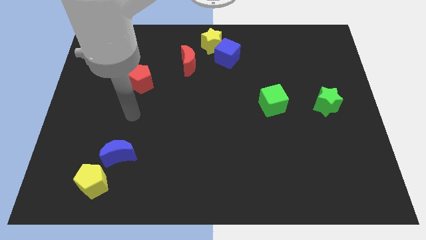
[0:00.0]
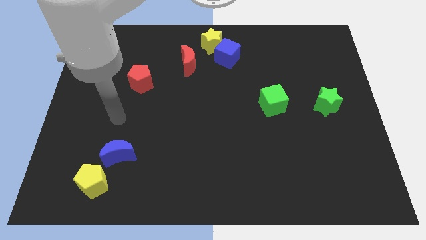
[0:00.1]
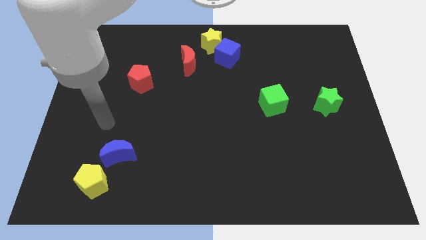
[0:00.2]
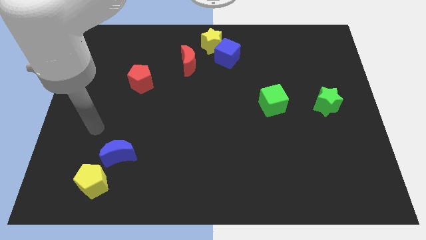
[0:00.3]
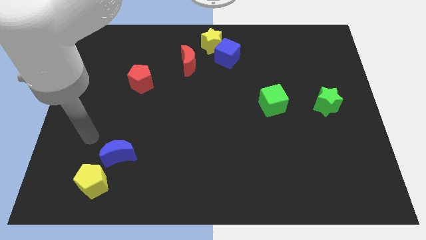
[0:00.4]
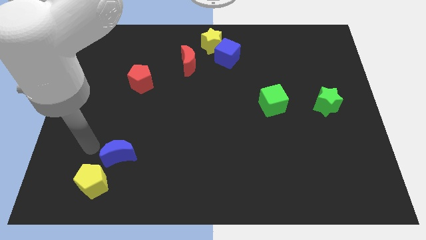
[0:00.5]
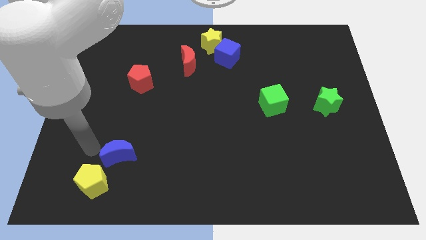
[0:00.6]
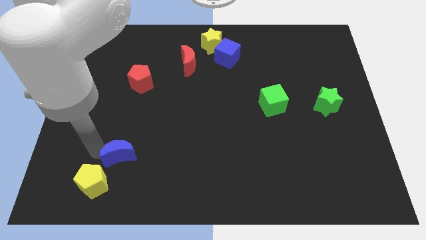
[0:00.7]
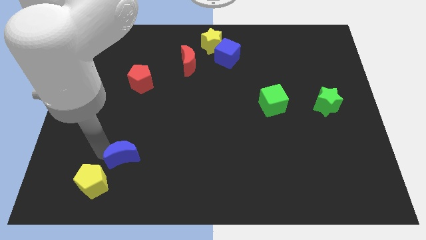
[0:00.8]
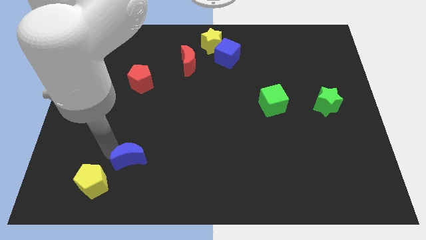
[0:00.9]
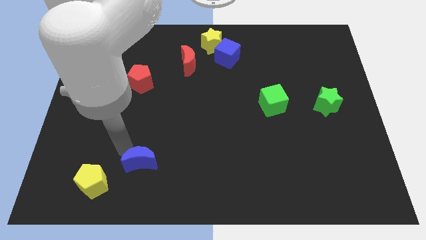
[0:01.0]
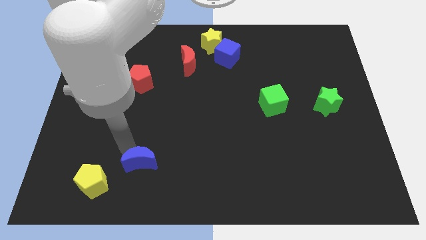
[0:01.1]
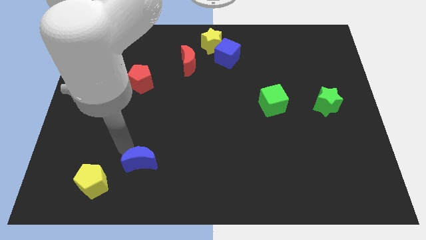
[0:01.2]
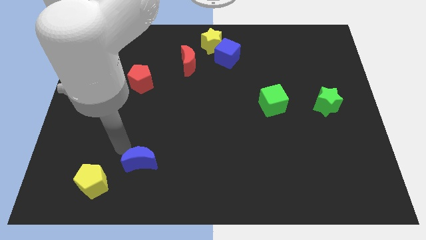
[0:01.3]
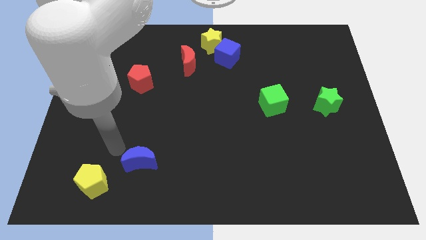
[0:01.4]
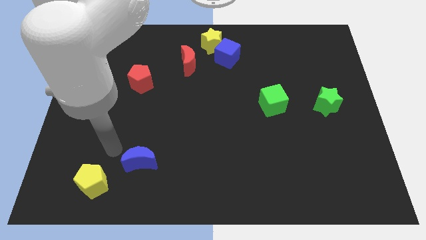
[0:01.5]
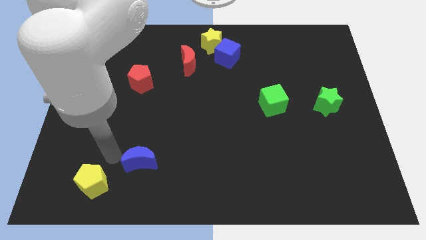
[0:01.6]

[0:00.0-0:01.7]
push the blue crescent slightly to the right

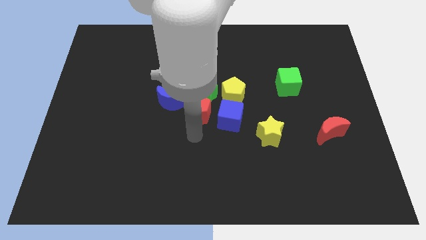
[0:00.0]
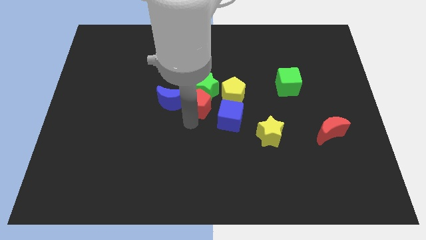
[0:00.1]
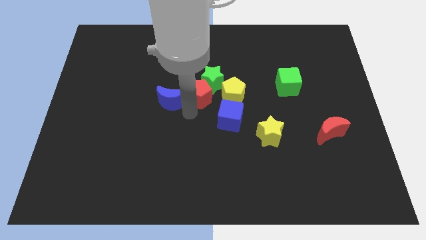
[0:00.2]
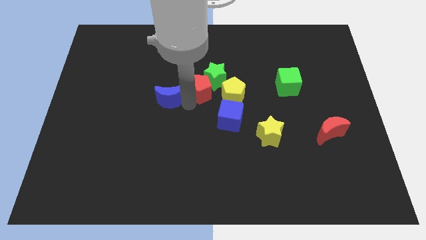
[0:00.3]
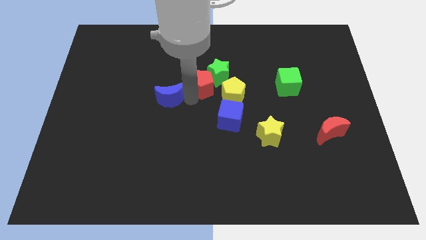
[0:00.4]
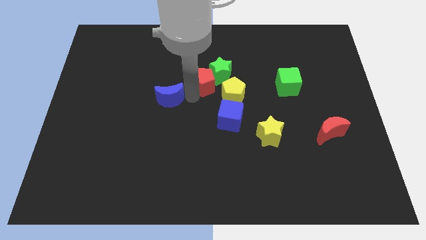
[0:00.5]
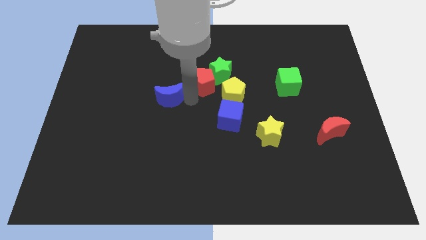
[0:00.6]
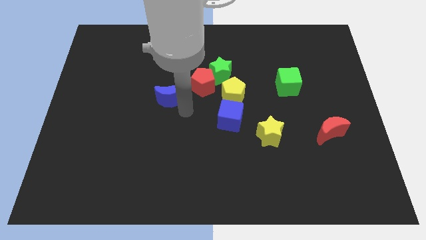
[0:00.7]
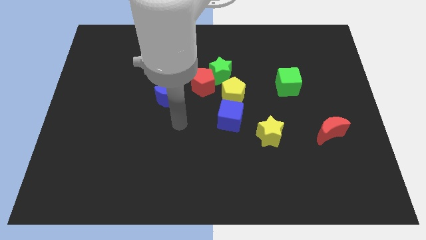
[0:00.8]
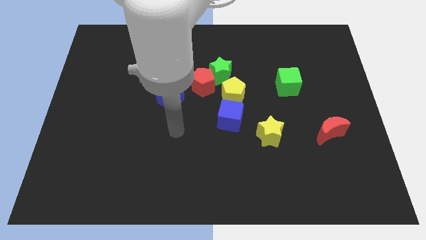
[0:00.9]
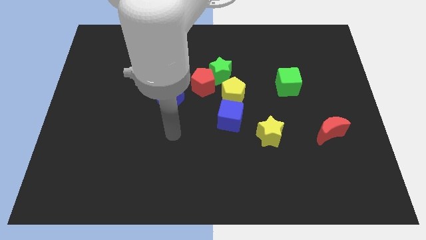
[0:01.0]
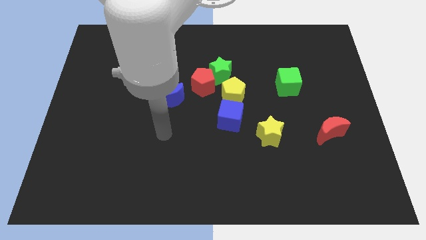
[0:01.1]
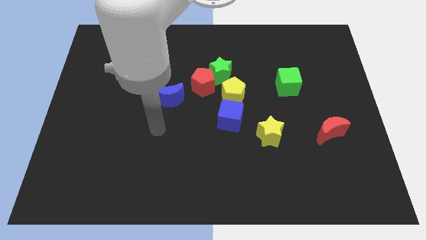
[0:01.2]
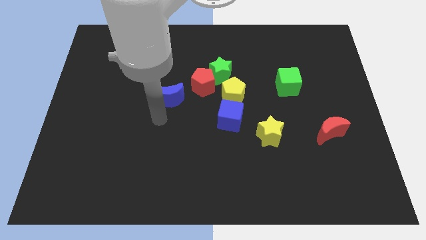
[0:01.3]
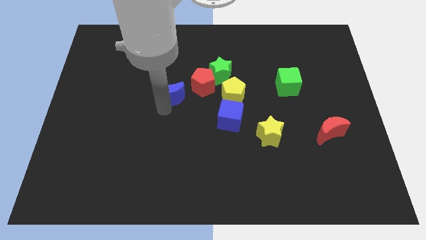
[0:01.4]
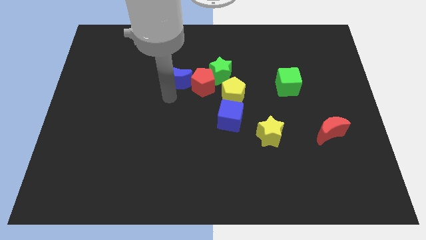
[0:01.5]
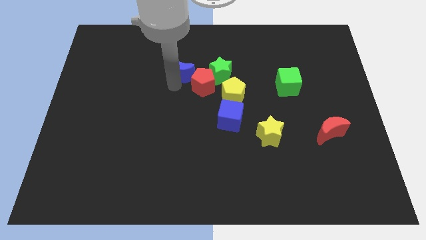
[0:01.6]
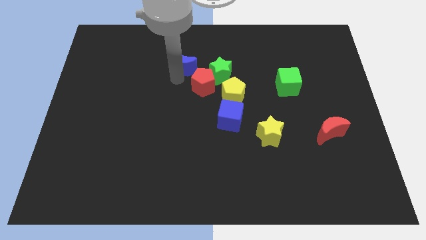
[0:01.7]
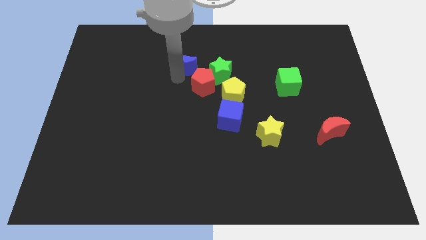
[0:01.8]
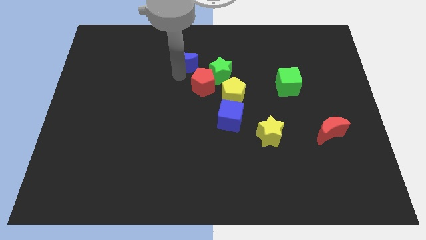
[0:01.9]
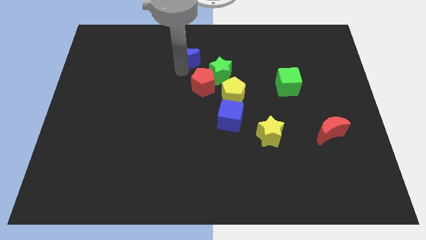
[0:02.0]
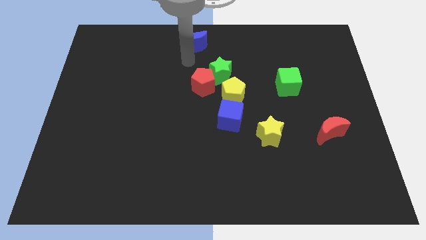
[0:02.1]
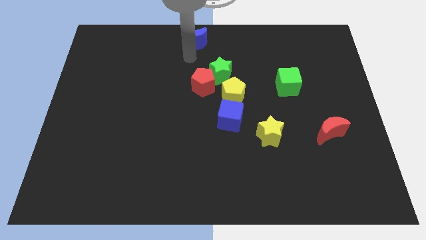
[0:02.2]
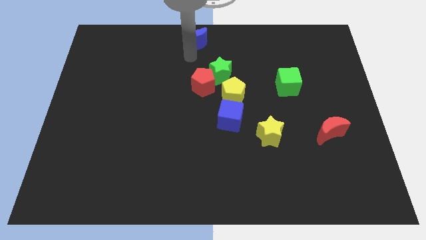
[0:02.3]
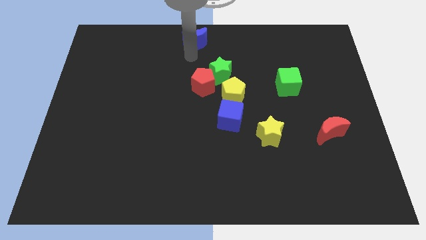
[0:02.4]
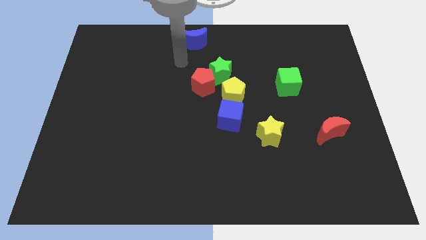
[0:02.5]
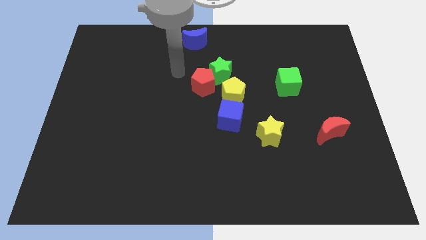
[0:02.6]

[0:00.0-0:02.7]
move blue moon to the top of the board

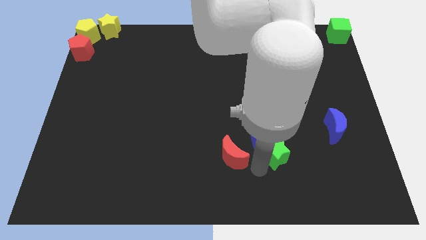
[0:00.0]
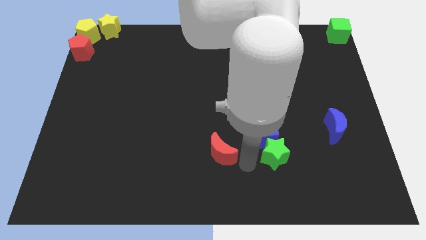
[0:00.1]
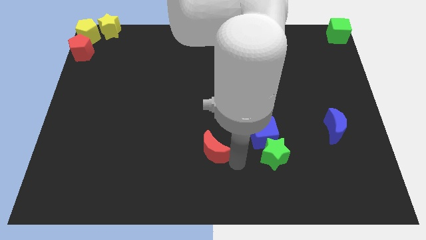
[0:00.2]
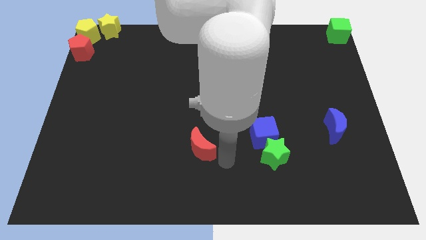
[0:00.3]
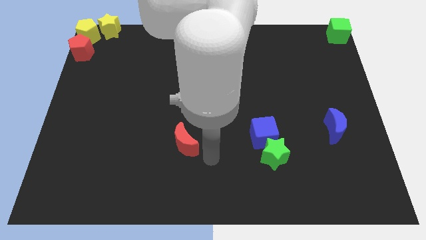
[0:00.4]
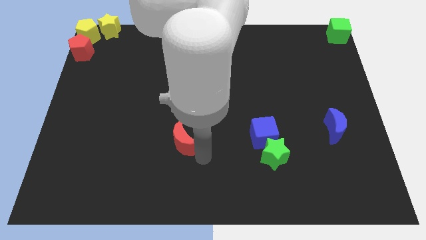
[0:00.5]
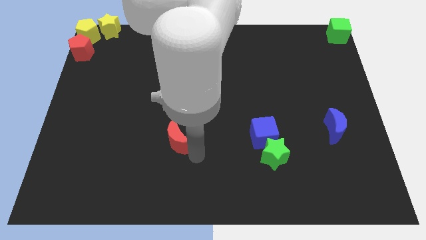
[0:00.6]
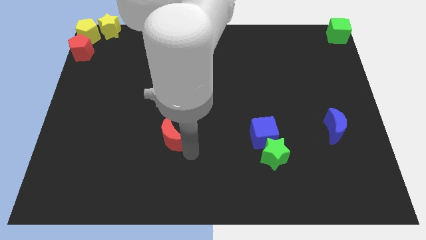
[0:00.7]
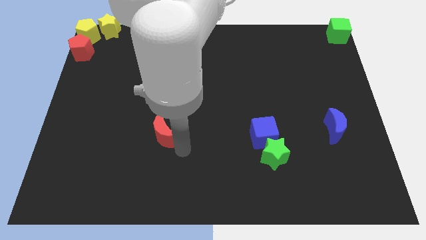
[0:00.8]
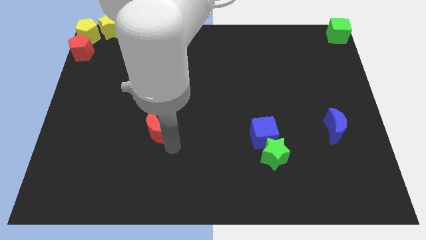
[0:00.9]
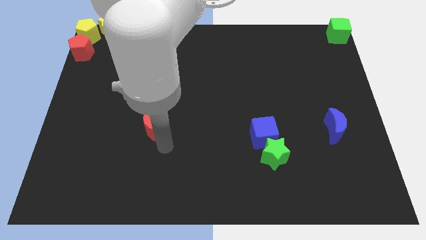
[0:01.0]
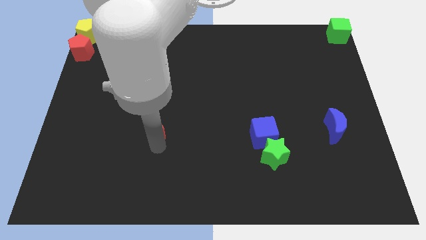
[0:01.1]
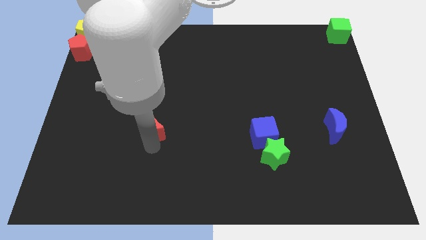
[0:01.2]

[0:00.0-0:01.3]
drag the red moon towards the left side of the board

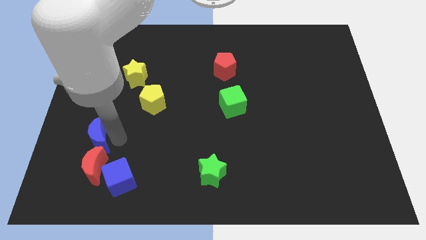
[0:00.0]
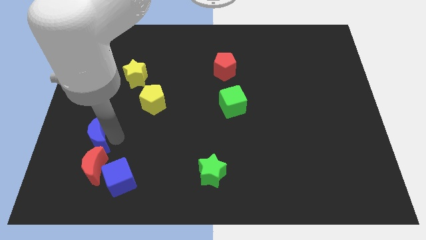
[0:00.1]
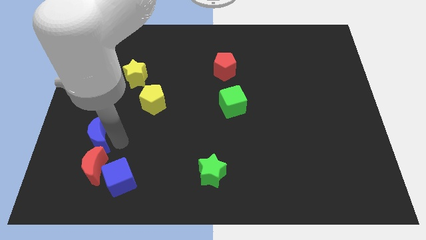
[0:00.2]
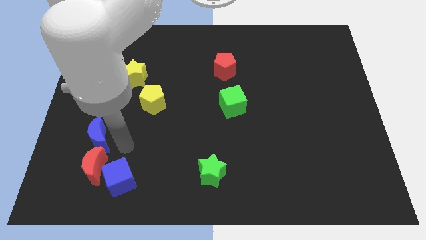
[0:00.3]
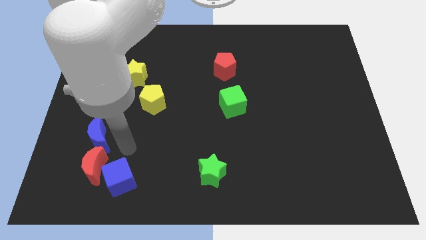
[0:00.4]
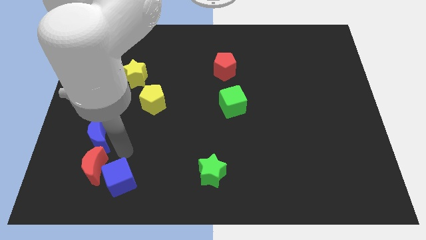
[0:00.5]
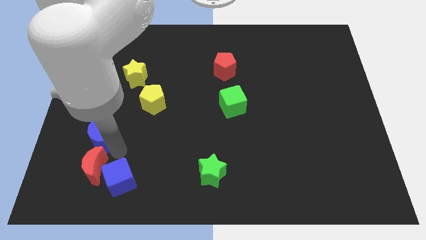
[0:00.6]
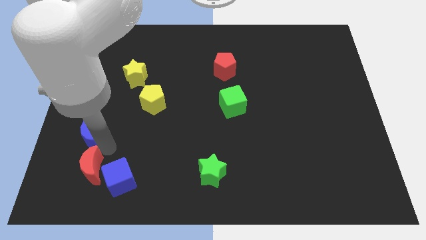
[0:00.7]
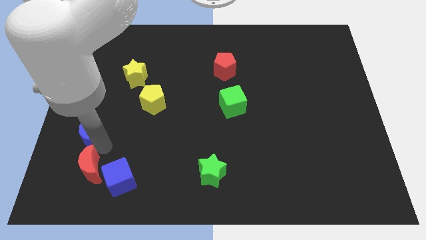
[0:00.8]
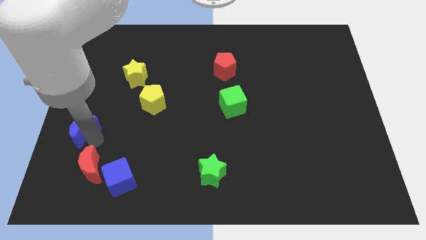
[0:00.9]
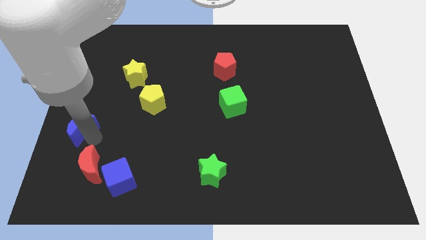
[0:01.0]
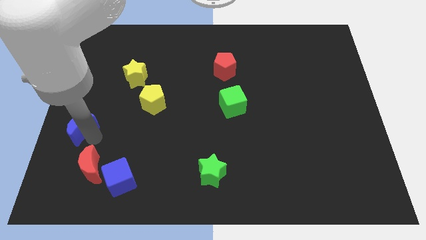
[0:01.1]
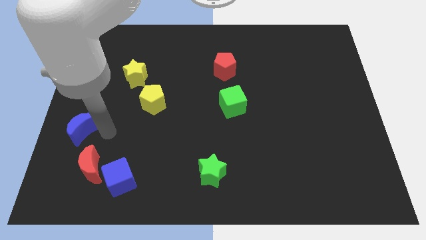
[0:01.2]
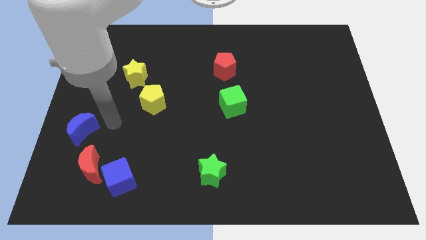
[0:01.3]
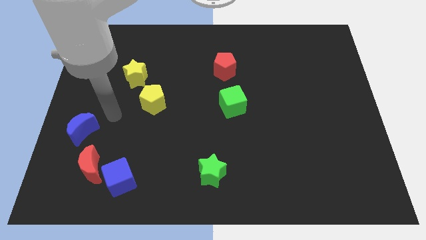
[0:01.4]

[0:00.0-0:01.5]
push the blue crescent to the top left of the red crescent

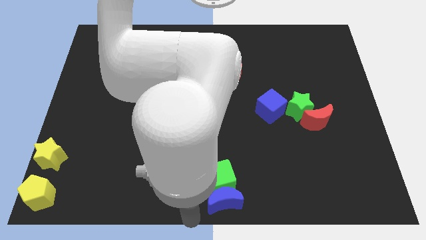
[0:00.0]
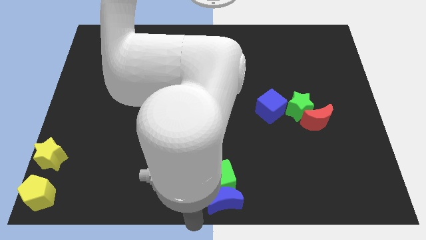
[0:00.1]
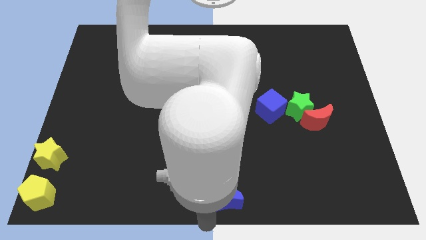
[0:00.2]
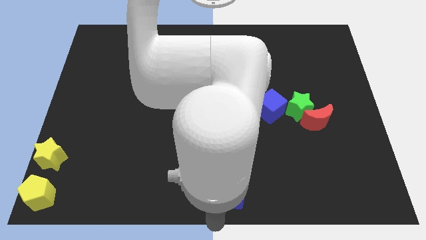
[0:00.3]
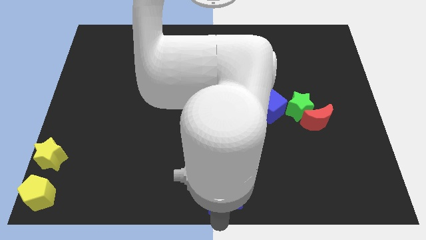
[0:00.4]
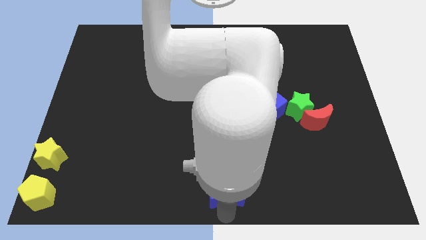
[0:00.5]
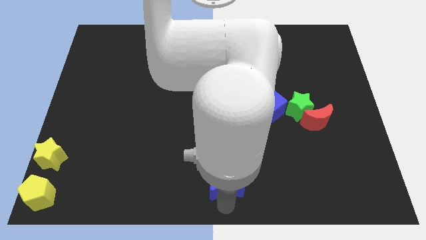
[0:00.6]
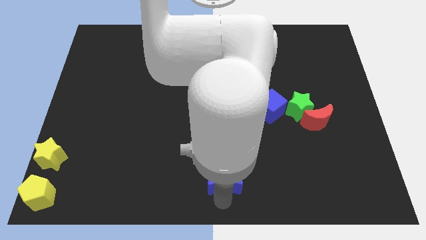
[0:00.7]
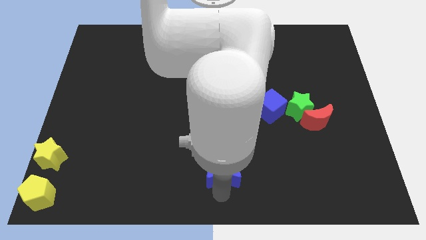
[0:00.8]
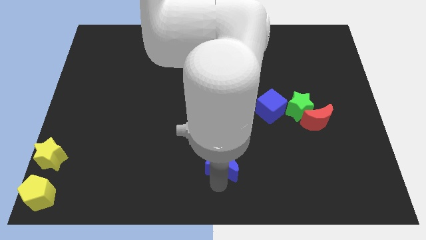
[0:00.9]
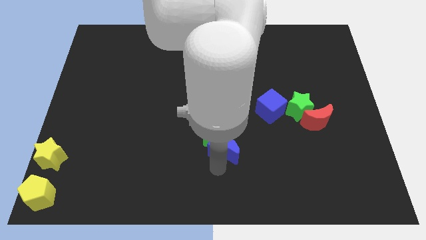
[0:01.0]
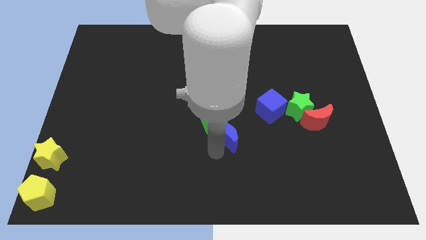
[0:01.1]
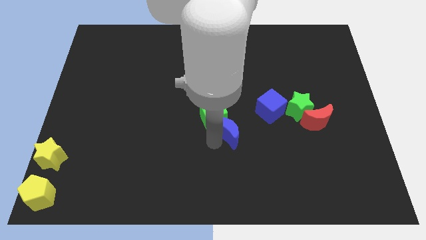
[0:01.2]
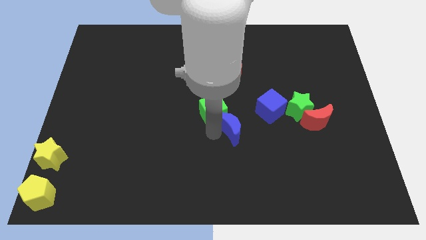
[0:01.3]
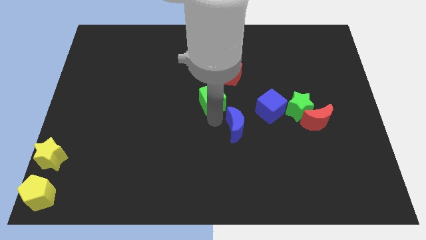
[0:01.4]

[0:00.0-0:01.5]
push the blue moon into the green cube

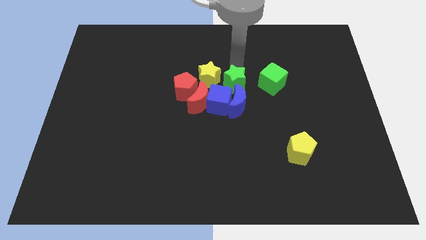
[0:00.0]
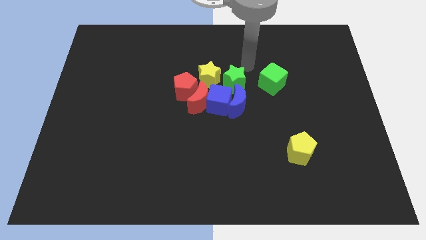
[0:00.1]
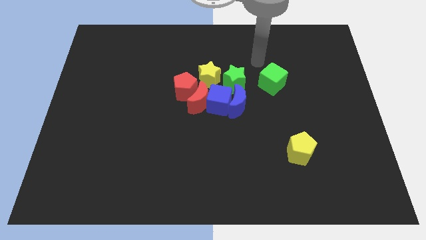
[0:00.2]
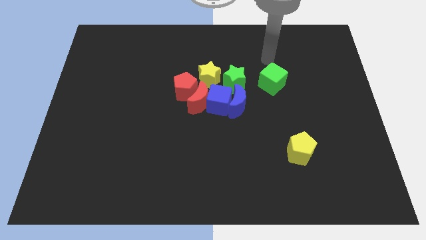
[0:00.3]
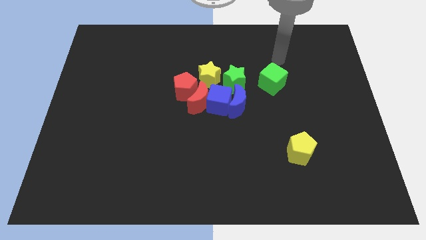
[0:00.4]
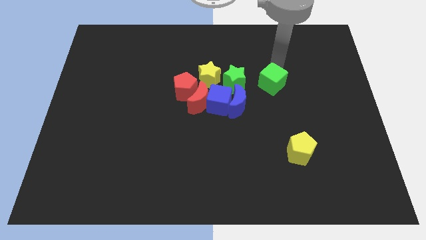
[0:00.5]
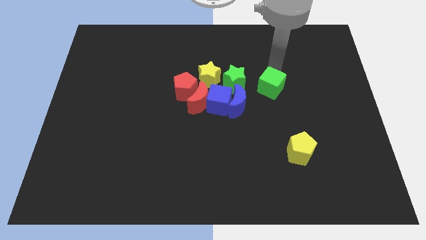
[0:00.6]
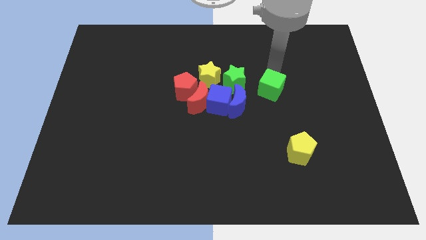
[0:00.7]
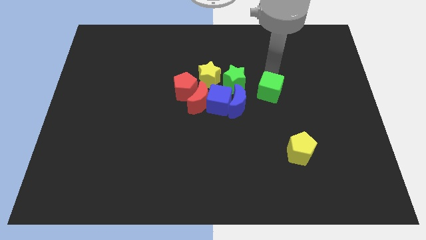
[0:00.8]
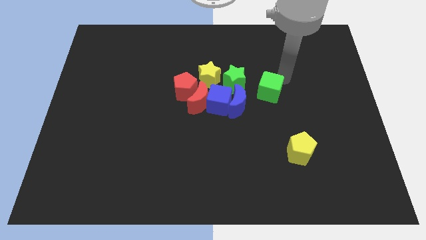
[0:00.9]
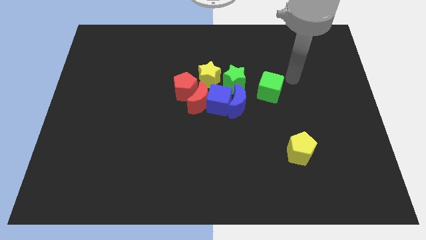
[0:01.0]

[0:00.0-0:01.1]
move the green star slightly to the bottom
